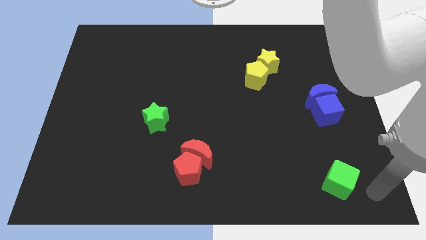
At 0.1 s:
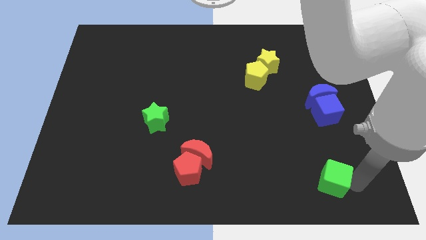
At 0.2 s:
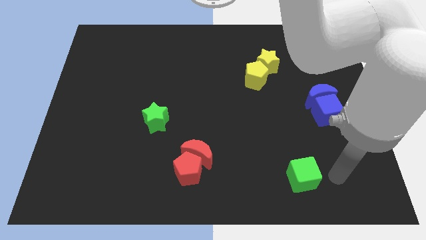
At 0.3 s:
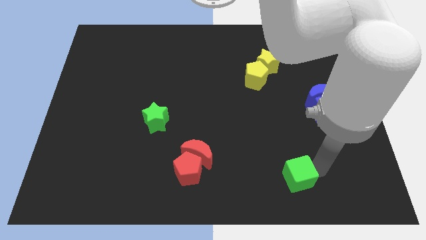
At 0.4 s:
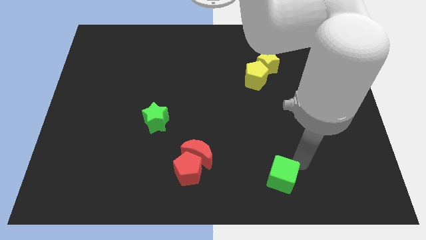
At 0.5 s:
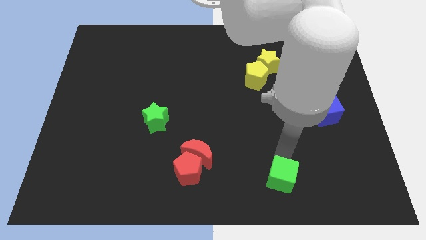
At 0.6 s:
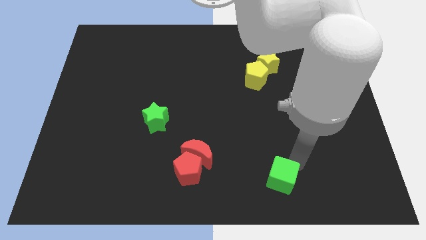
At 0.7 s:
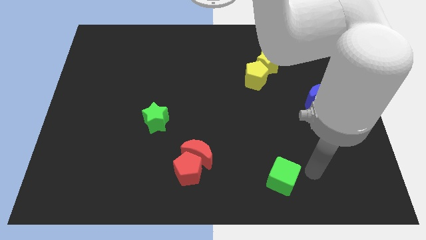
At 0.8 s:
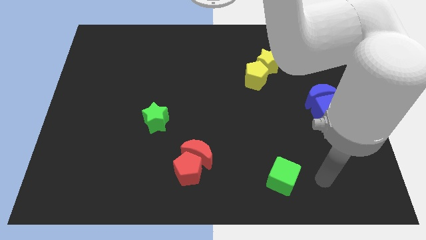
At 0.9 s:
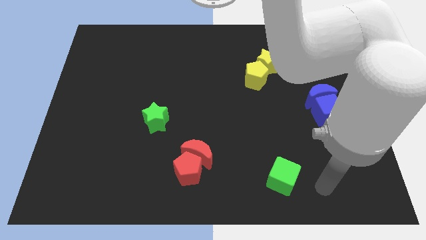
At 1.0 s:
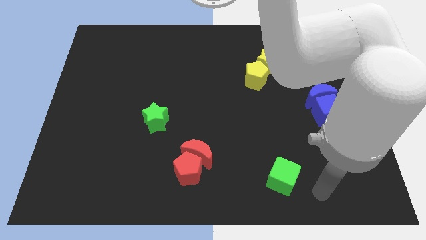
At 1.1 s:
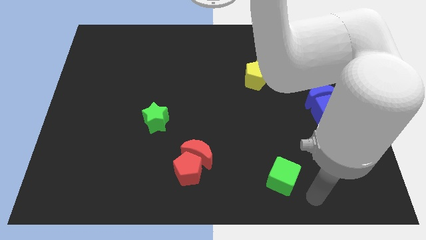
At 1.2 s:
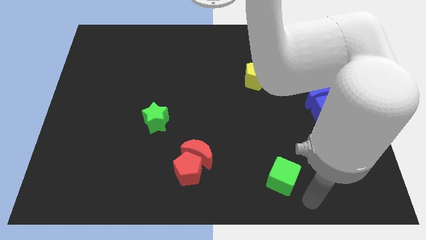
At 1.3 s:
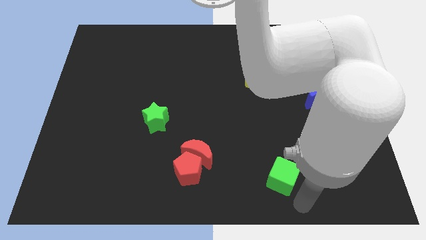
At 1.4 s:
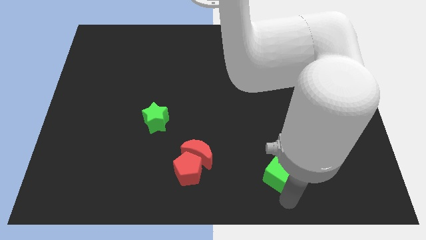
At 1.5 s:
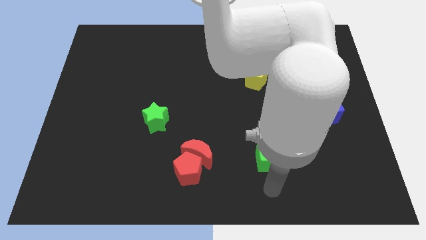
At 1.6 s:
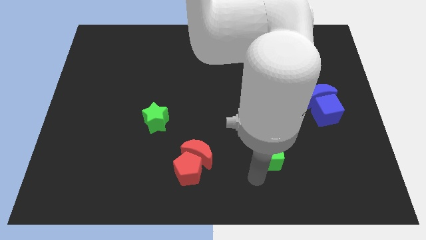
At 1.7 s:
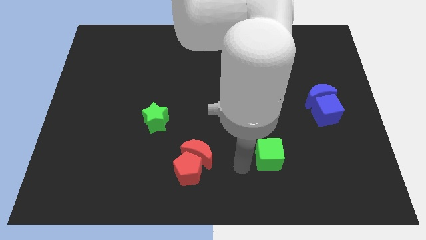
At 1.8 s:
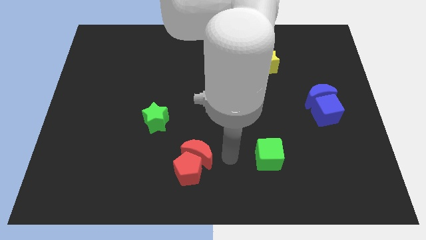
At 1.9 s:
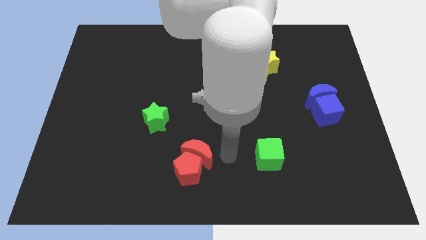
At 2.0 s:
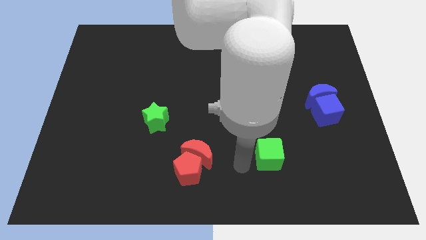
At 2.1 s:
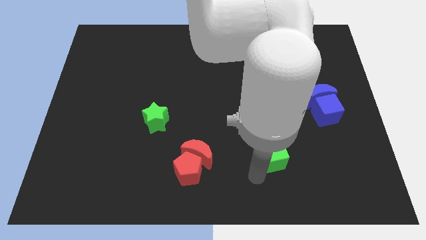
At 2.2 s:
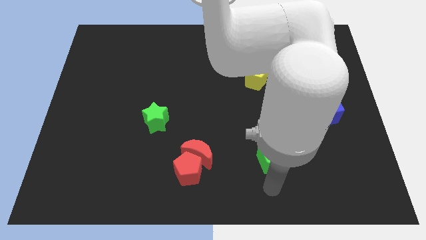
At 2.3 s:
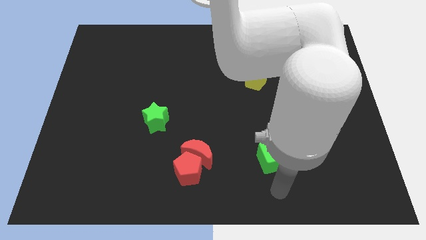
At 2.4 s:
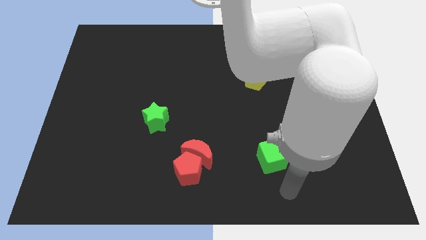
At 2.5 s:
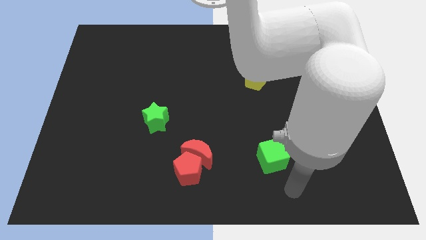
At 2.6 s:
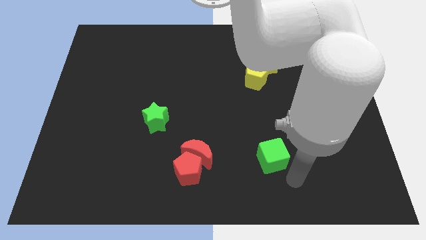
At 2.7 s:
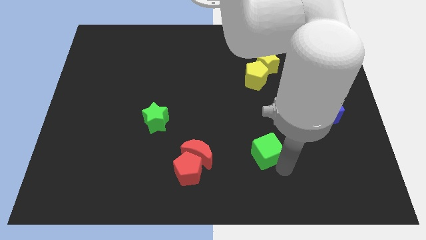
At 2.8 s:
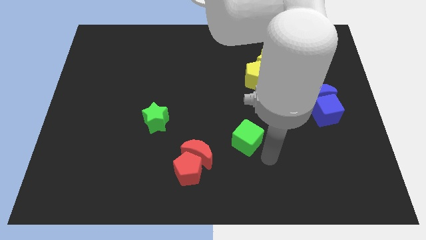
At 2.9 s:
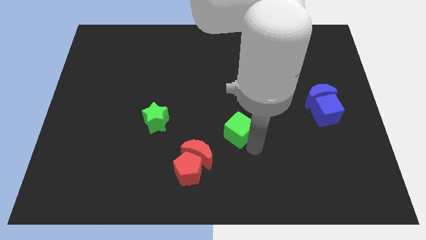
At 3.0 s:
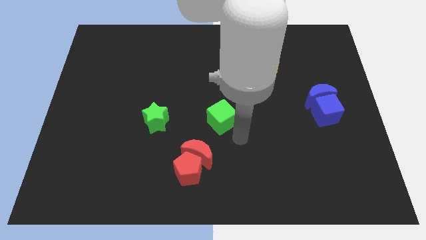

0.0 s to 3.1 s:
push the green cube to the top right of the red crescent

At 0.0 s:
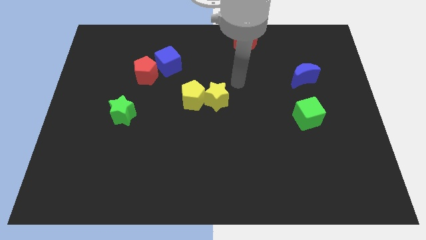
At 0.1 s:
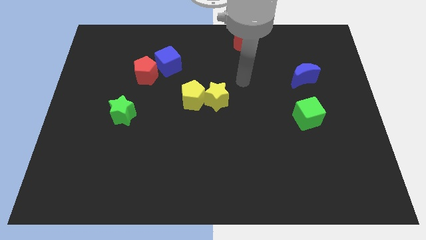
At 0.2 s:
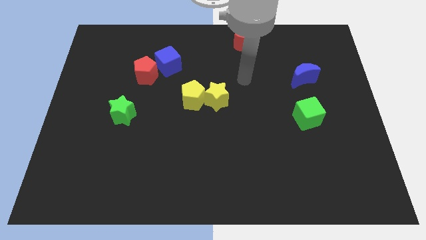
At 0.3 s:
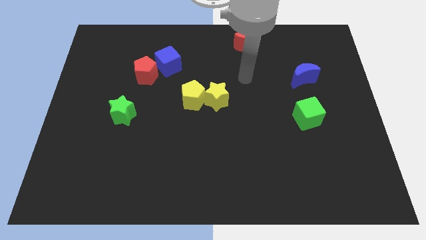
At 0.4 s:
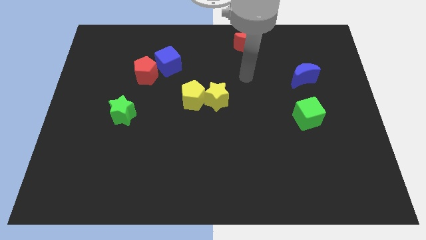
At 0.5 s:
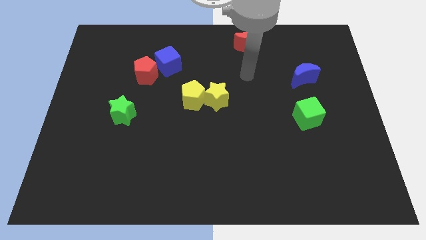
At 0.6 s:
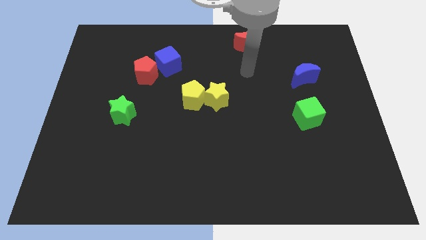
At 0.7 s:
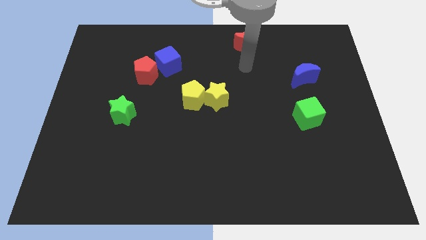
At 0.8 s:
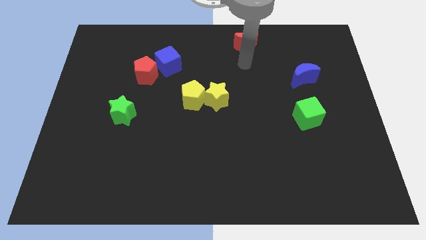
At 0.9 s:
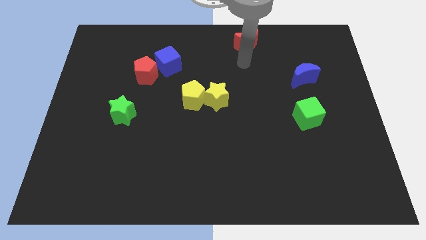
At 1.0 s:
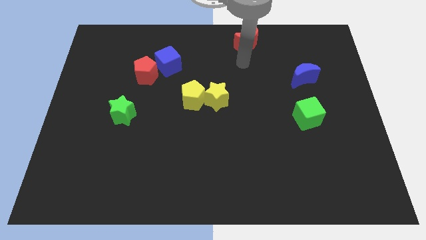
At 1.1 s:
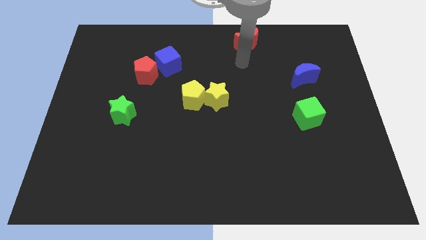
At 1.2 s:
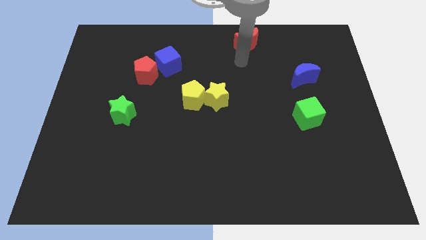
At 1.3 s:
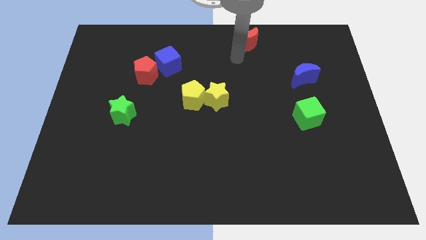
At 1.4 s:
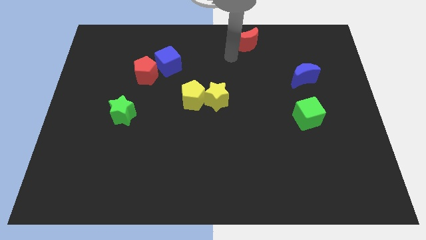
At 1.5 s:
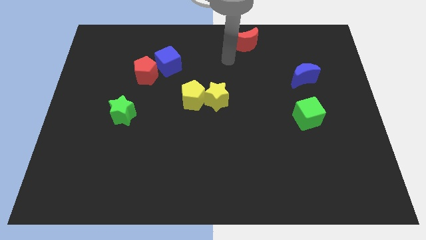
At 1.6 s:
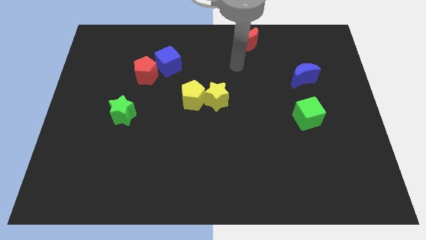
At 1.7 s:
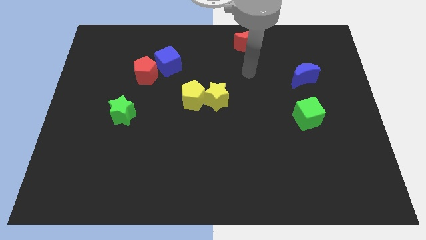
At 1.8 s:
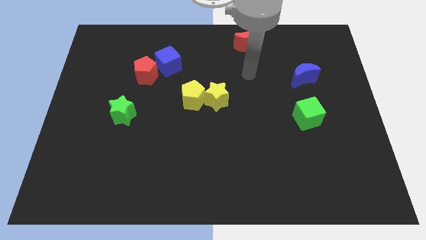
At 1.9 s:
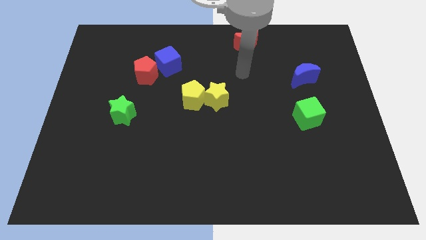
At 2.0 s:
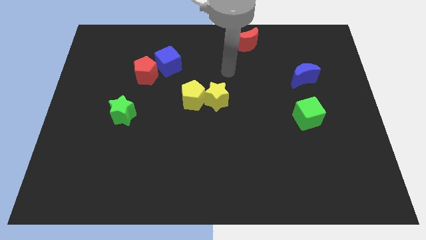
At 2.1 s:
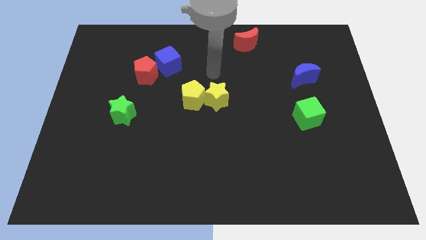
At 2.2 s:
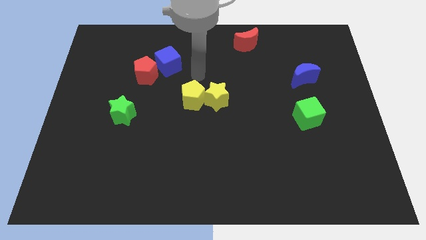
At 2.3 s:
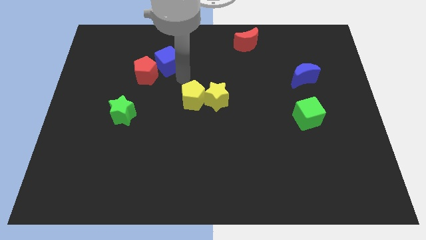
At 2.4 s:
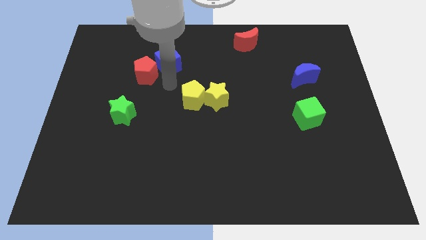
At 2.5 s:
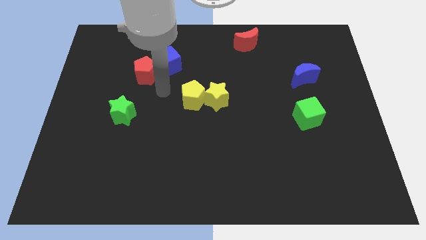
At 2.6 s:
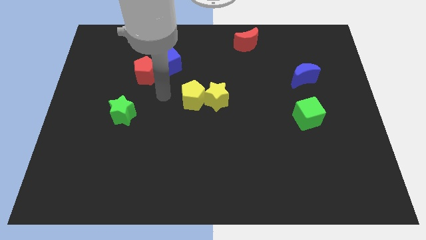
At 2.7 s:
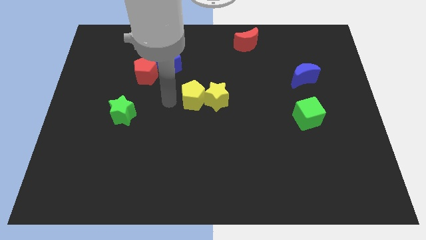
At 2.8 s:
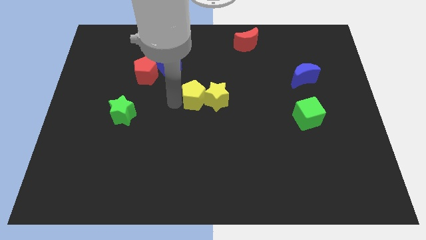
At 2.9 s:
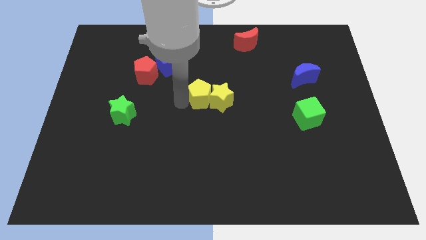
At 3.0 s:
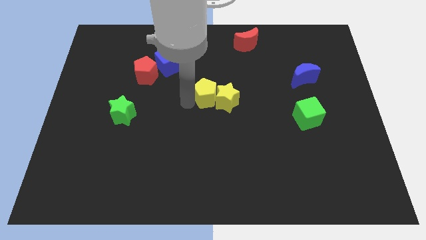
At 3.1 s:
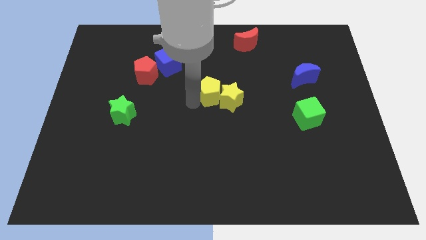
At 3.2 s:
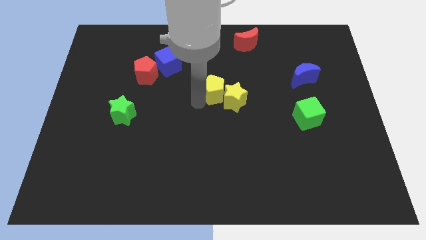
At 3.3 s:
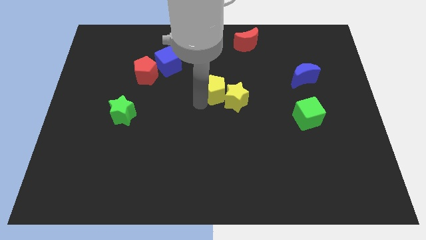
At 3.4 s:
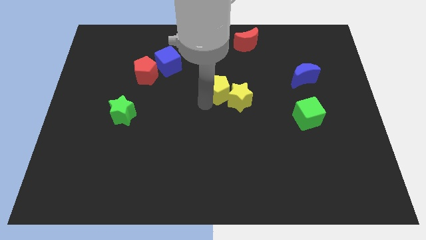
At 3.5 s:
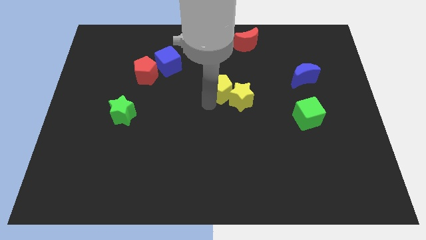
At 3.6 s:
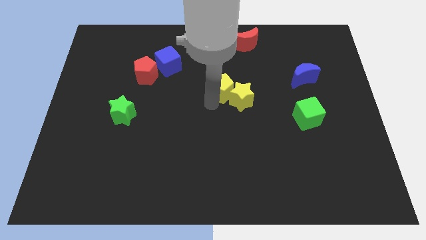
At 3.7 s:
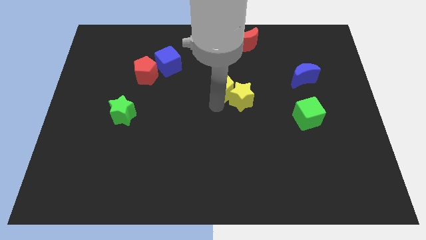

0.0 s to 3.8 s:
move the group of yellow blocks to the right

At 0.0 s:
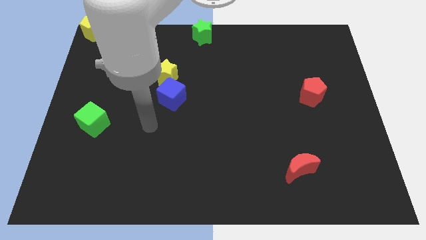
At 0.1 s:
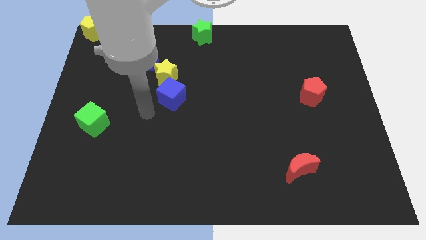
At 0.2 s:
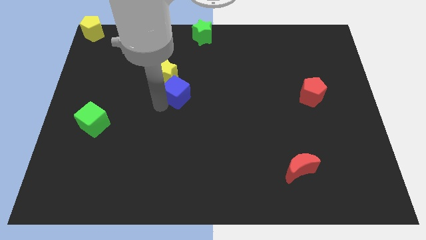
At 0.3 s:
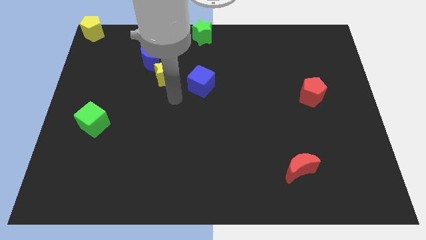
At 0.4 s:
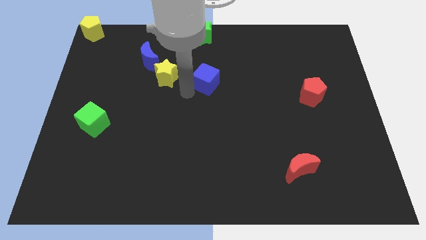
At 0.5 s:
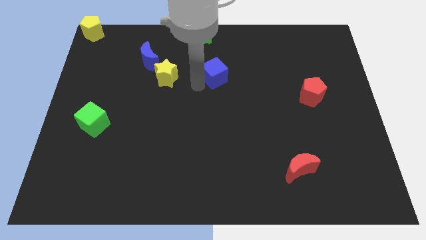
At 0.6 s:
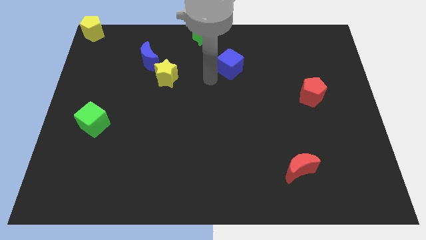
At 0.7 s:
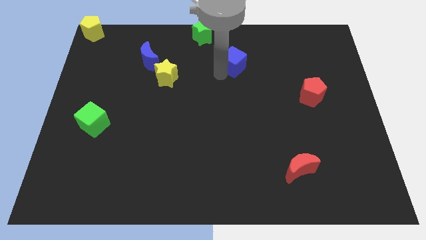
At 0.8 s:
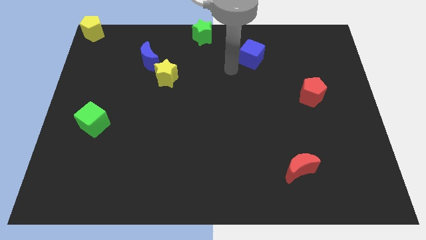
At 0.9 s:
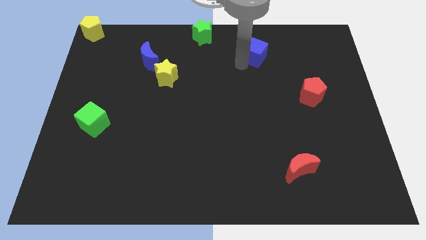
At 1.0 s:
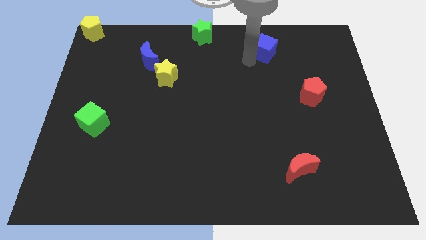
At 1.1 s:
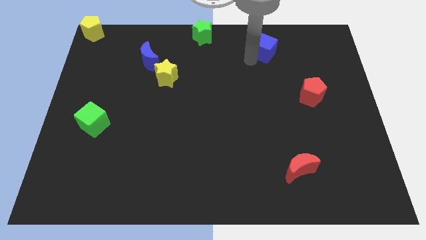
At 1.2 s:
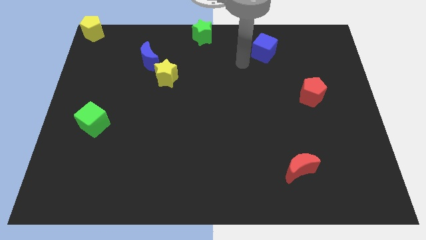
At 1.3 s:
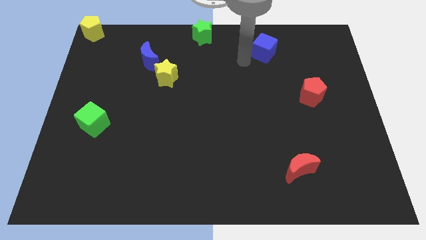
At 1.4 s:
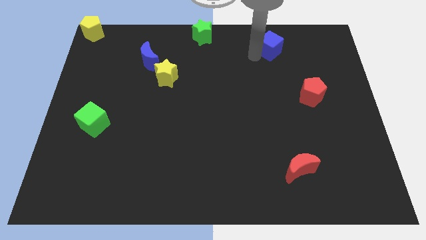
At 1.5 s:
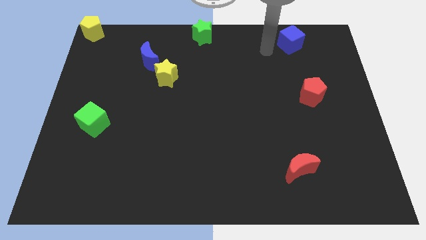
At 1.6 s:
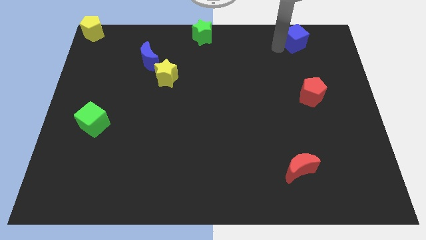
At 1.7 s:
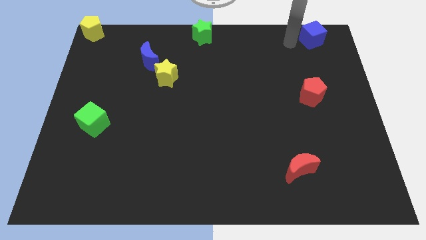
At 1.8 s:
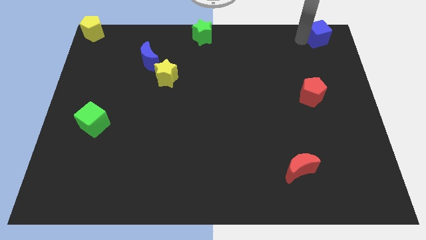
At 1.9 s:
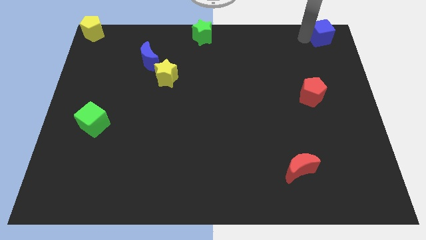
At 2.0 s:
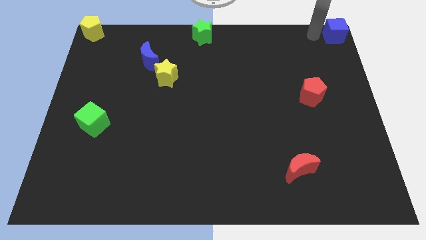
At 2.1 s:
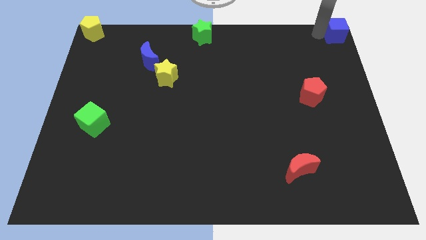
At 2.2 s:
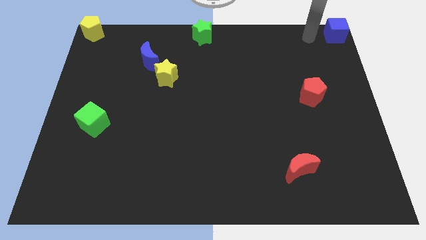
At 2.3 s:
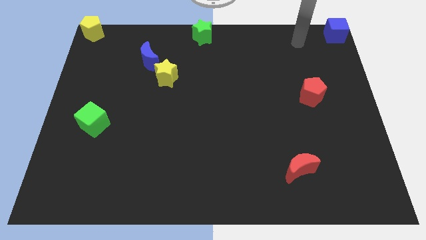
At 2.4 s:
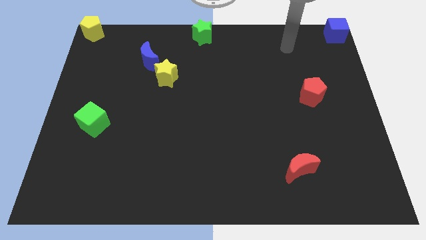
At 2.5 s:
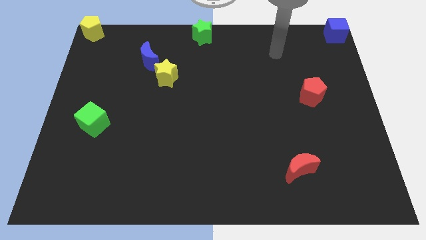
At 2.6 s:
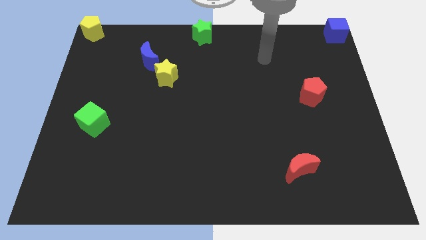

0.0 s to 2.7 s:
place the blue cube at the top right corner of the board
